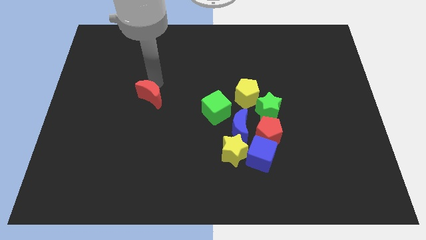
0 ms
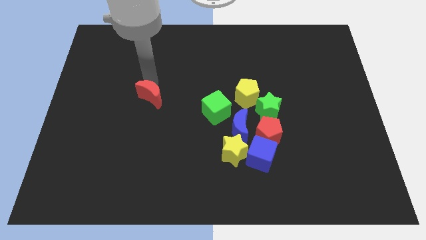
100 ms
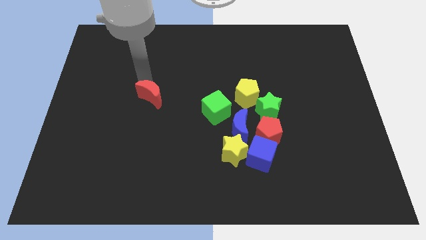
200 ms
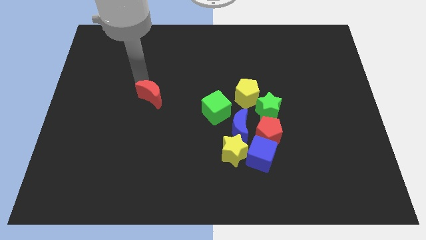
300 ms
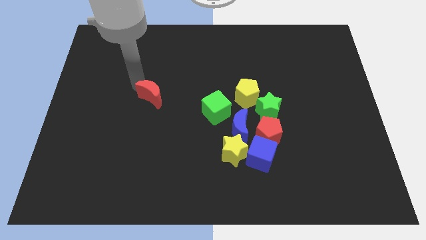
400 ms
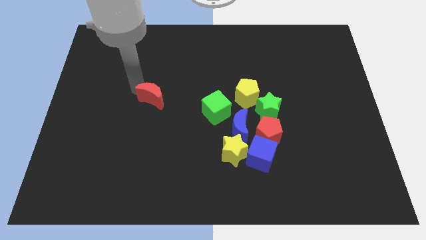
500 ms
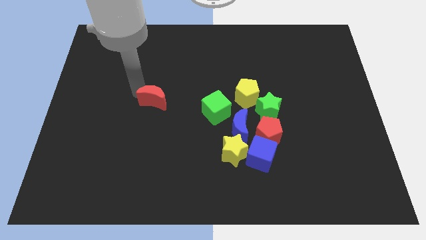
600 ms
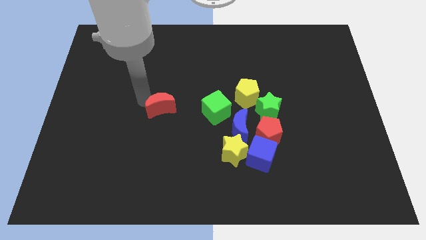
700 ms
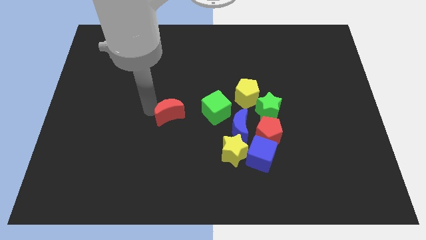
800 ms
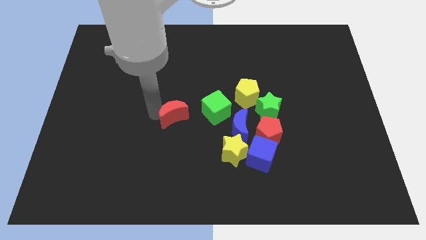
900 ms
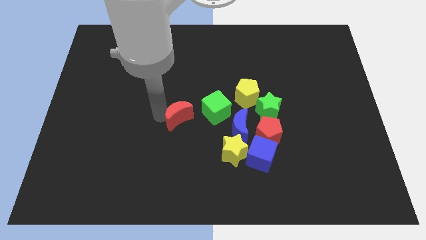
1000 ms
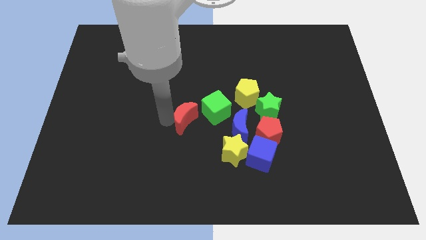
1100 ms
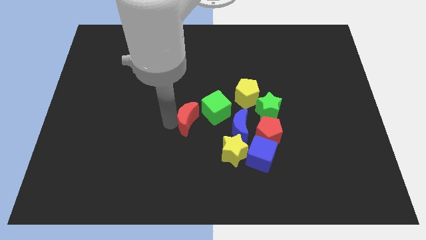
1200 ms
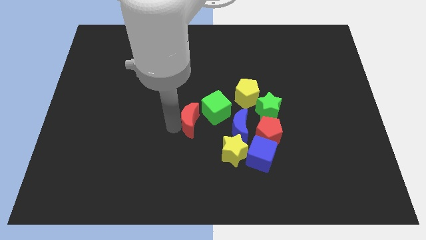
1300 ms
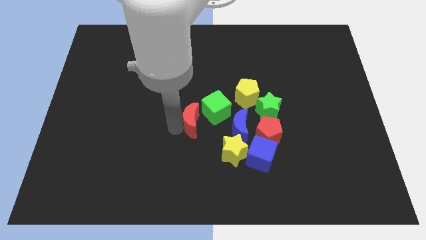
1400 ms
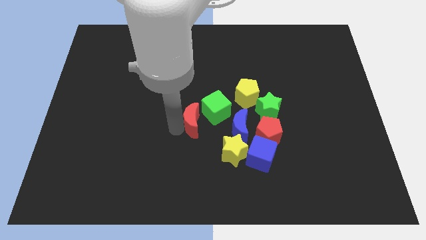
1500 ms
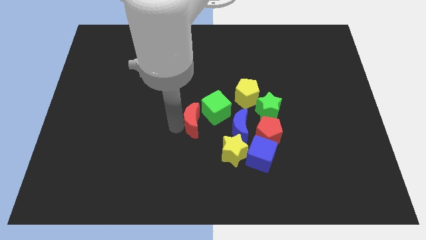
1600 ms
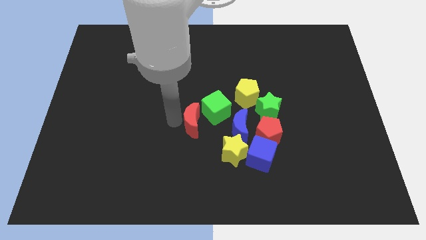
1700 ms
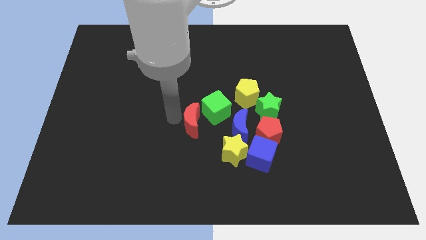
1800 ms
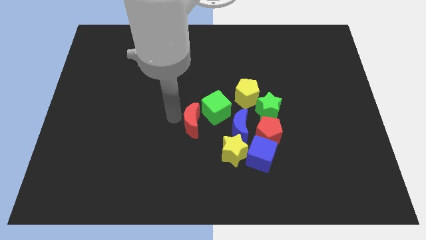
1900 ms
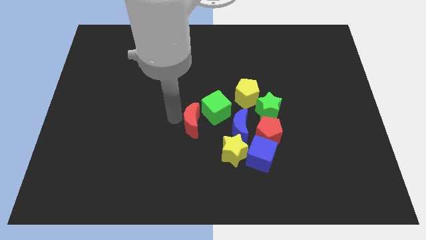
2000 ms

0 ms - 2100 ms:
push the red crescent to the left of the green cube

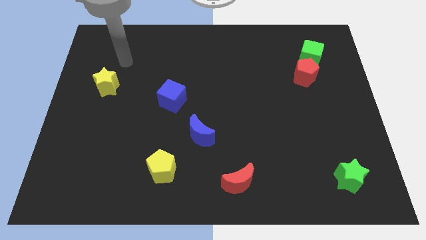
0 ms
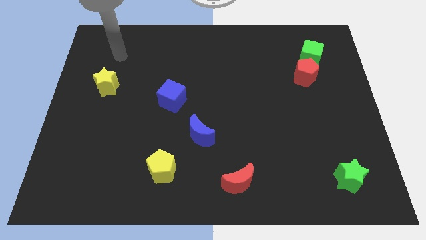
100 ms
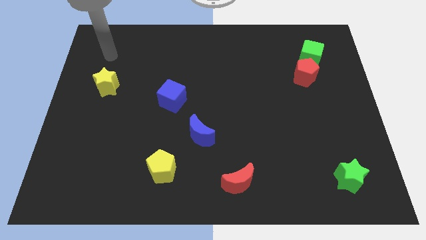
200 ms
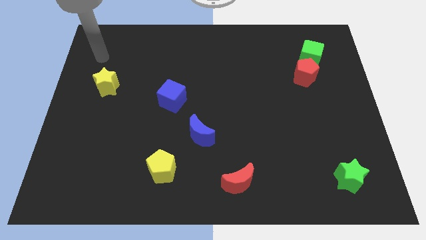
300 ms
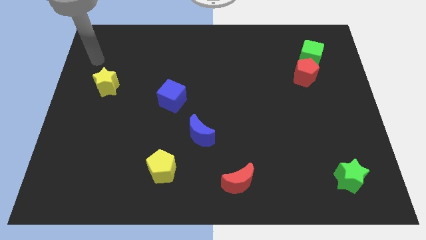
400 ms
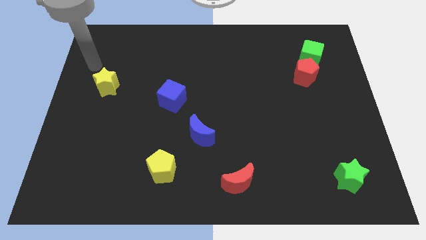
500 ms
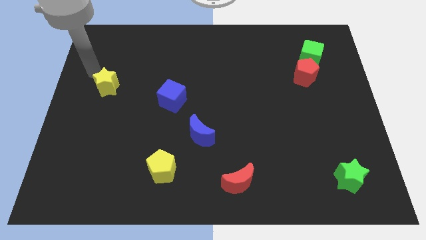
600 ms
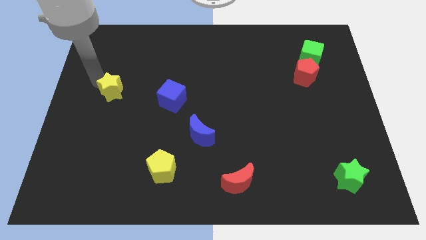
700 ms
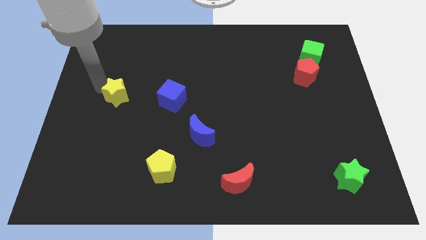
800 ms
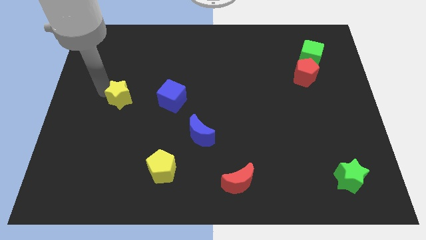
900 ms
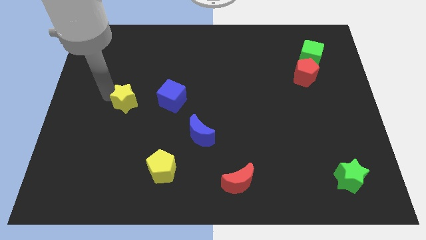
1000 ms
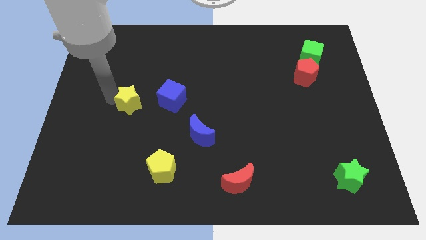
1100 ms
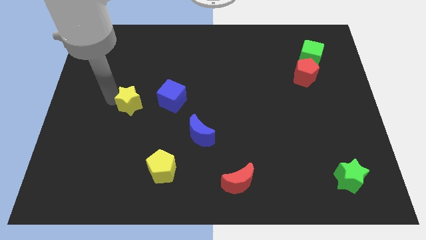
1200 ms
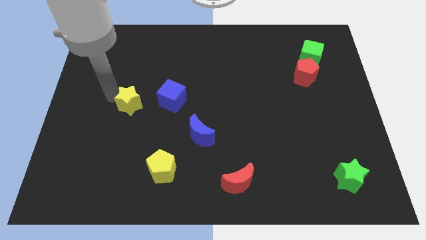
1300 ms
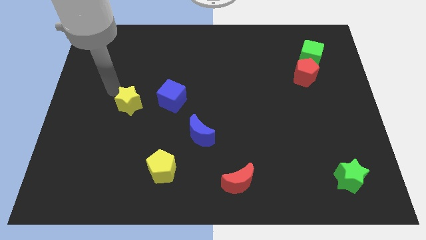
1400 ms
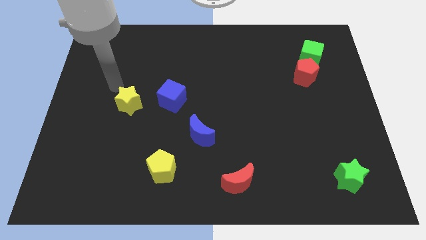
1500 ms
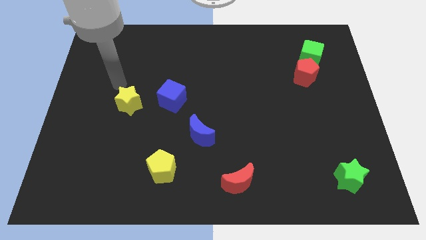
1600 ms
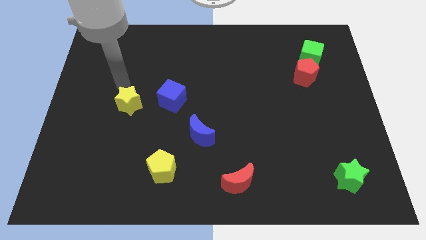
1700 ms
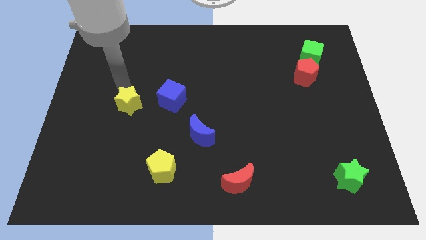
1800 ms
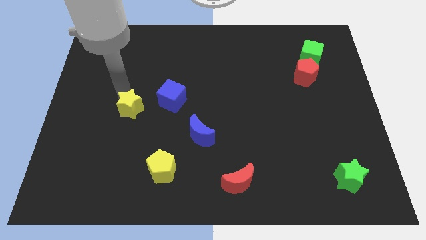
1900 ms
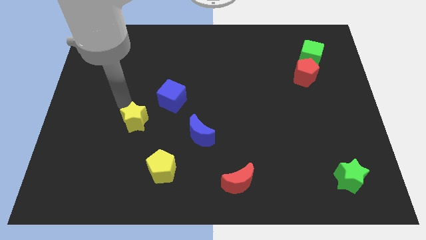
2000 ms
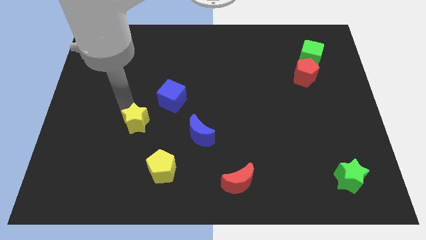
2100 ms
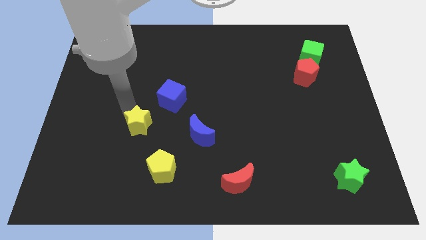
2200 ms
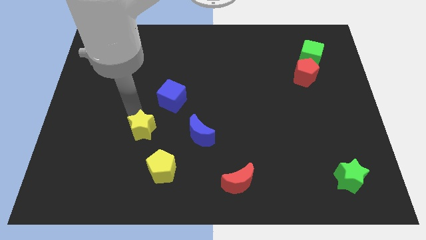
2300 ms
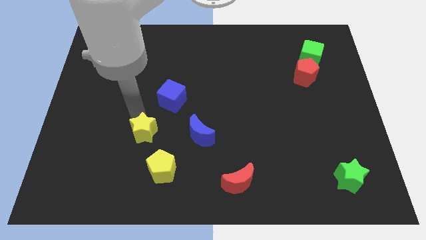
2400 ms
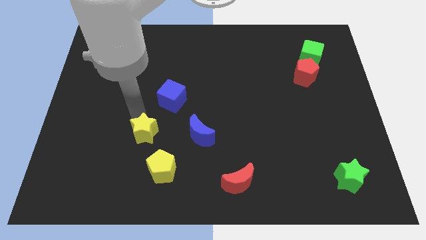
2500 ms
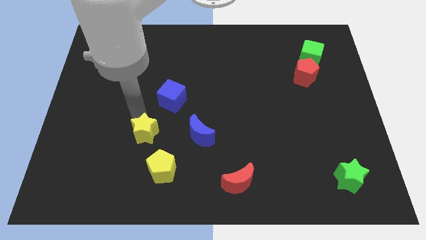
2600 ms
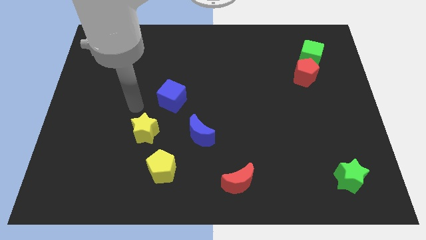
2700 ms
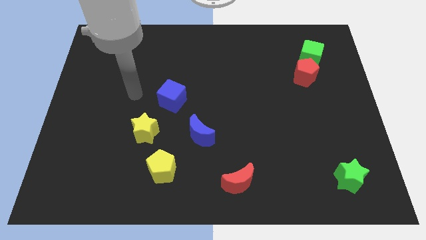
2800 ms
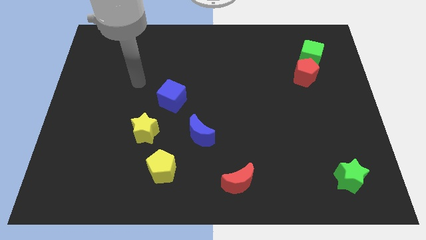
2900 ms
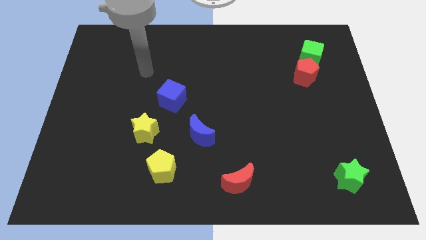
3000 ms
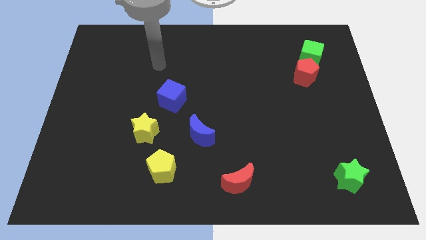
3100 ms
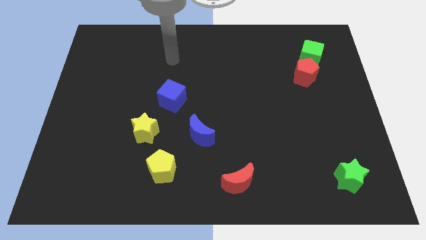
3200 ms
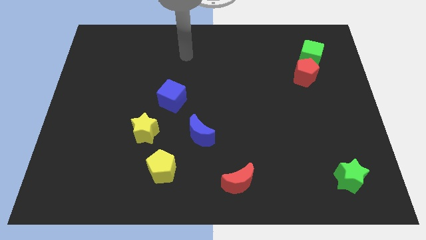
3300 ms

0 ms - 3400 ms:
move yellow star towards yellow pentagon

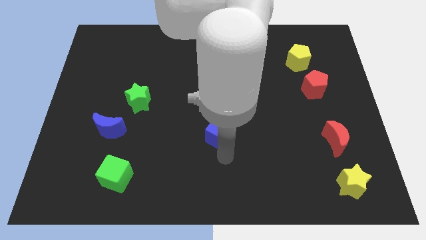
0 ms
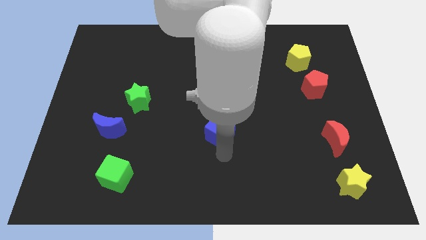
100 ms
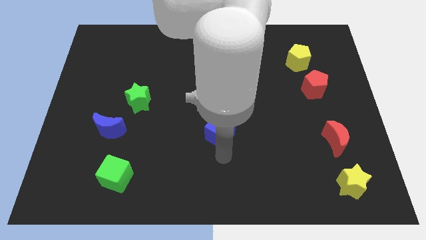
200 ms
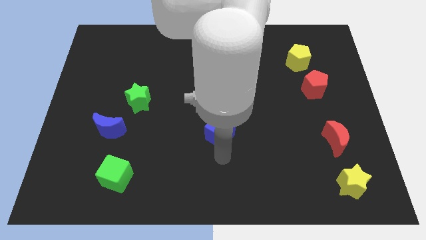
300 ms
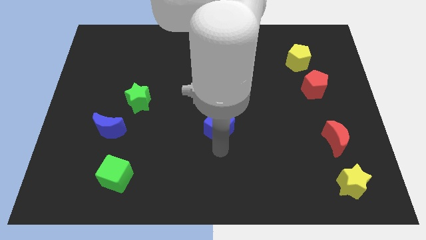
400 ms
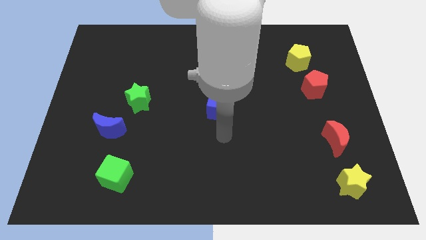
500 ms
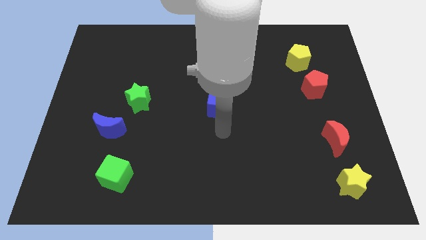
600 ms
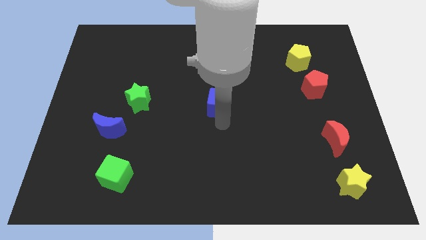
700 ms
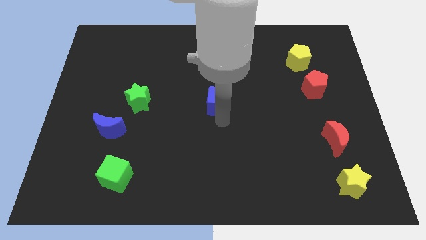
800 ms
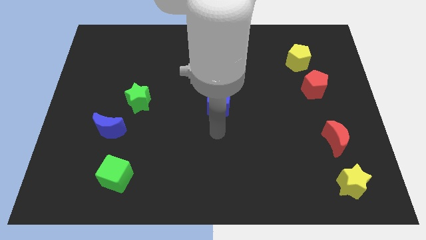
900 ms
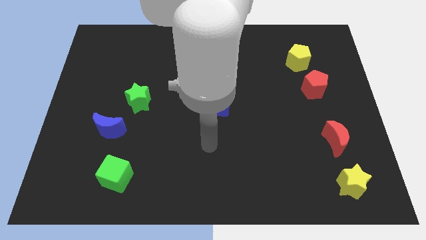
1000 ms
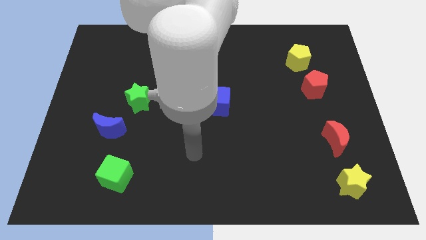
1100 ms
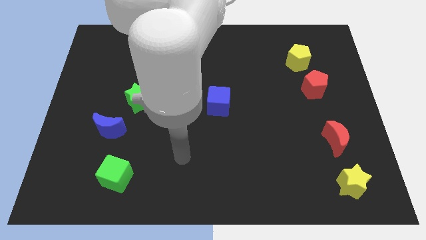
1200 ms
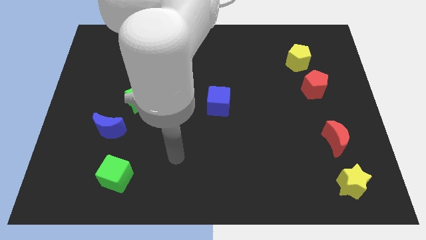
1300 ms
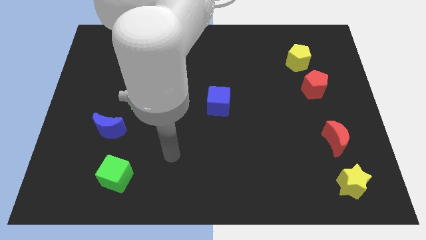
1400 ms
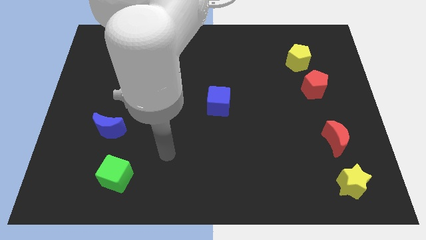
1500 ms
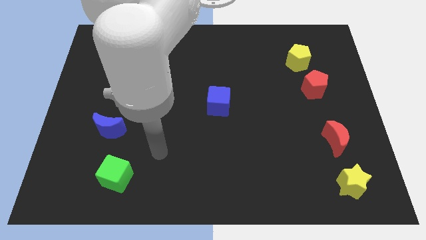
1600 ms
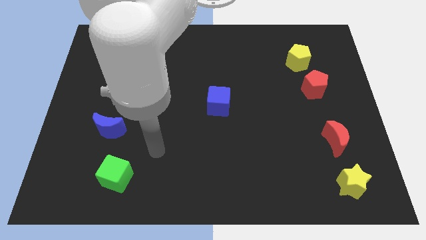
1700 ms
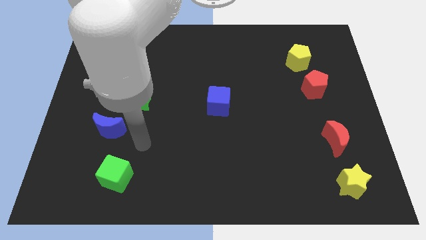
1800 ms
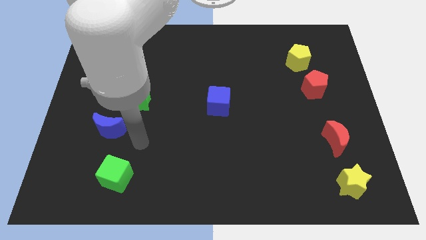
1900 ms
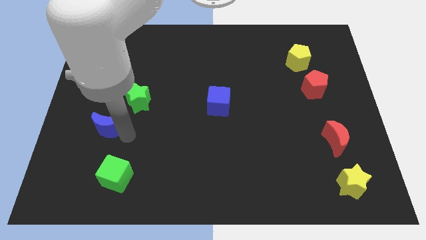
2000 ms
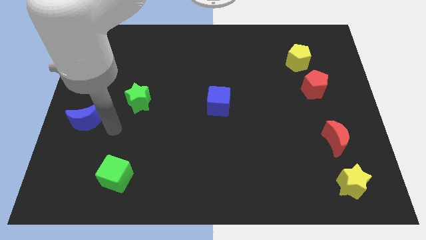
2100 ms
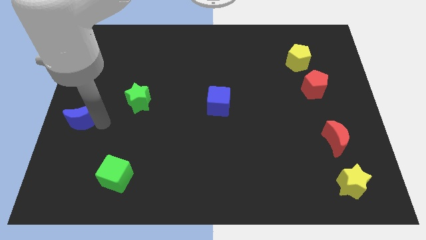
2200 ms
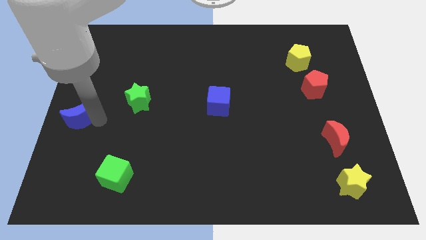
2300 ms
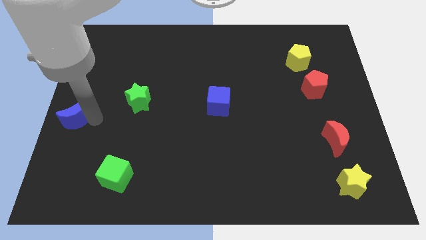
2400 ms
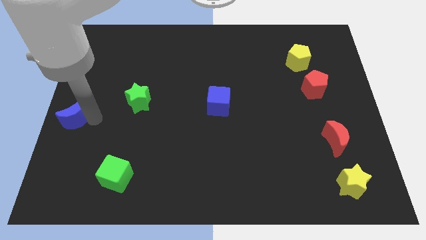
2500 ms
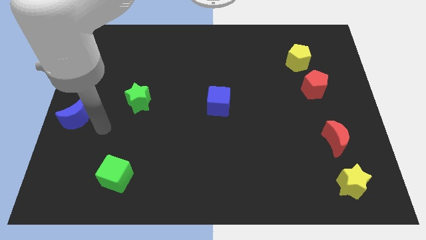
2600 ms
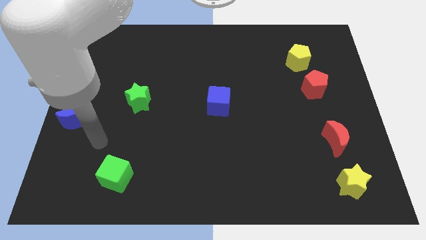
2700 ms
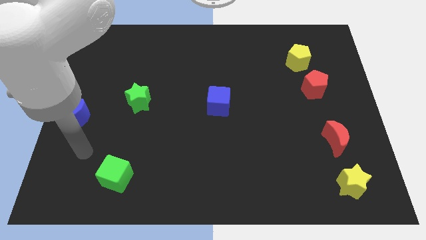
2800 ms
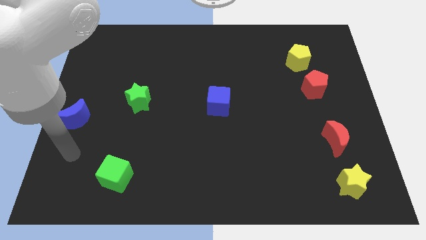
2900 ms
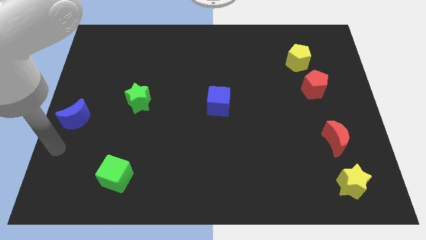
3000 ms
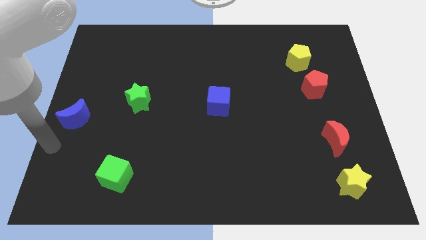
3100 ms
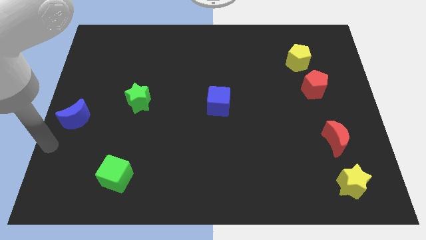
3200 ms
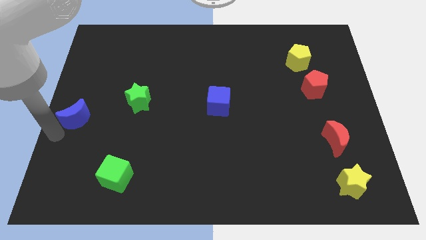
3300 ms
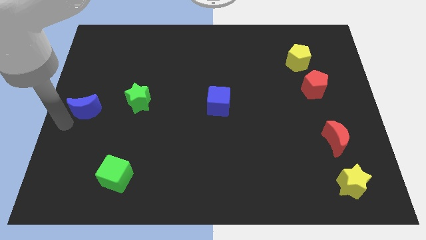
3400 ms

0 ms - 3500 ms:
push the blue moon towards the left center of the board
